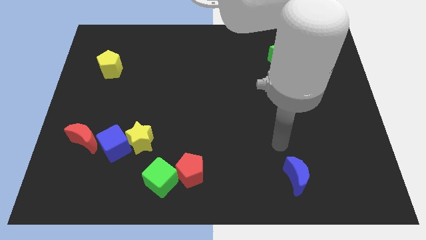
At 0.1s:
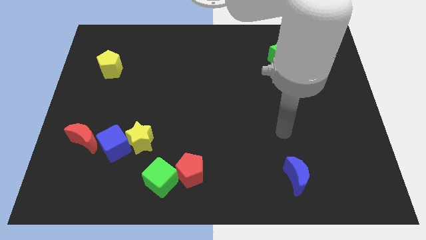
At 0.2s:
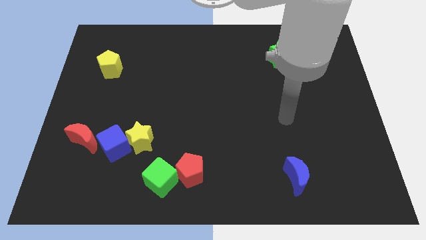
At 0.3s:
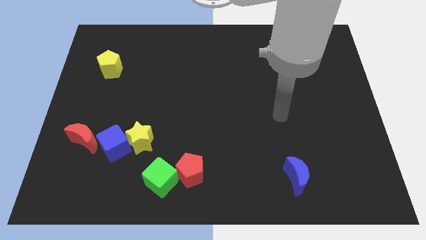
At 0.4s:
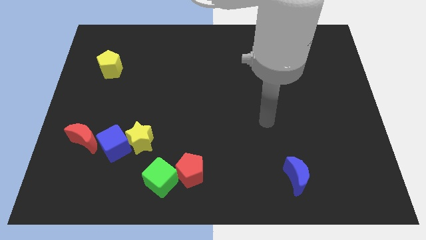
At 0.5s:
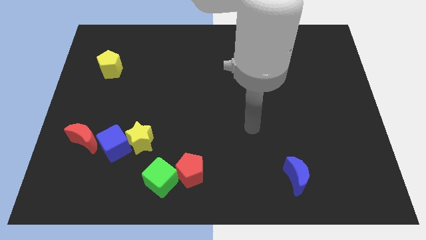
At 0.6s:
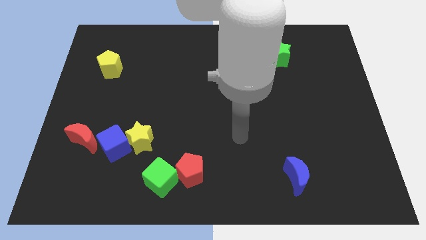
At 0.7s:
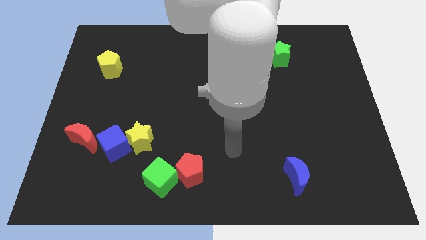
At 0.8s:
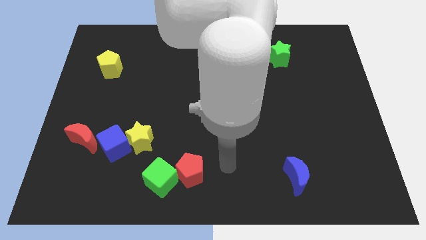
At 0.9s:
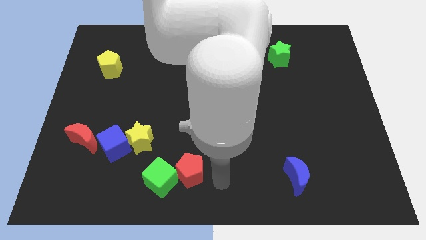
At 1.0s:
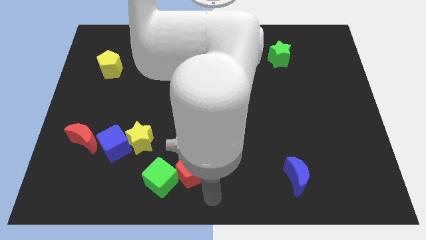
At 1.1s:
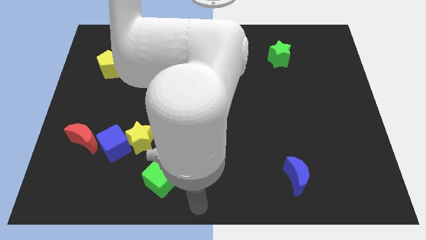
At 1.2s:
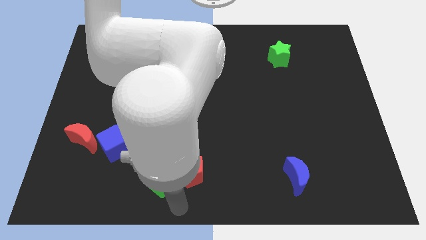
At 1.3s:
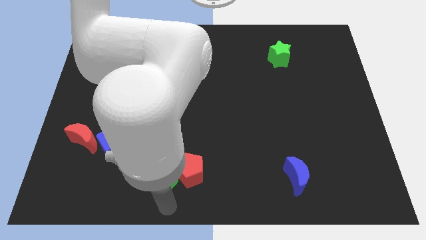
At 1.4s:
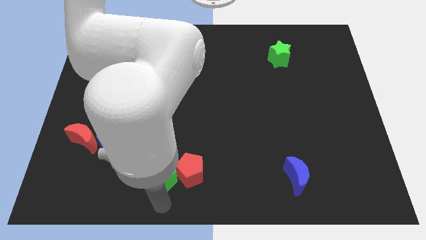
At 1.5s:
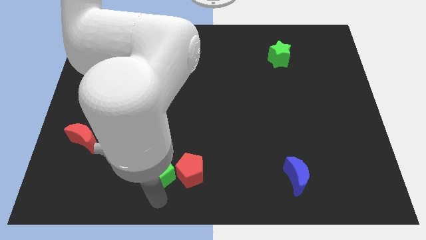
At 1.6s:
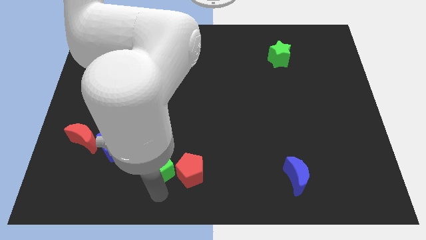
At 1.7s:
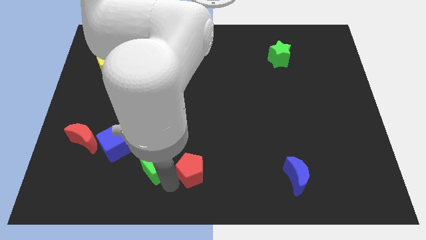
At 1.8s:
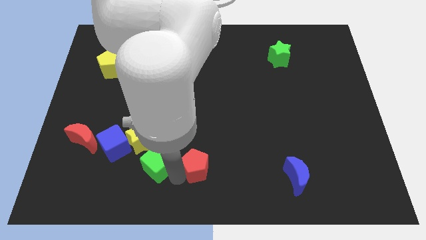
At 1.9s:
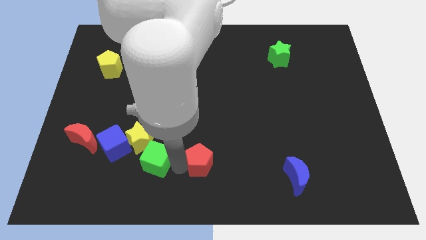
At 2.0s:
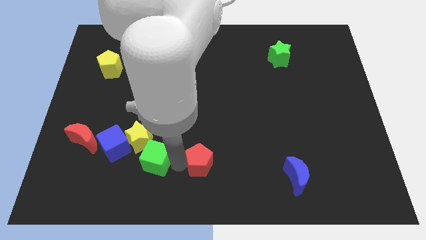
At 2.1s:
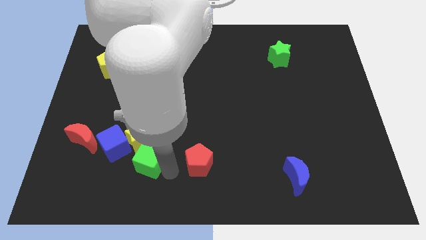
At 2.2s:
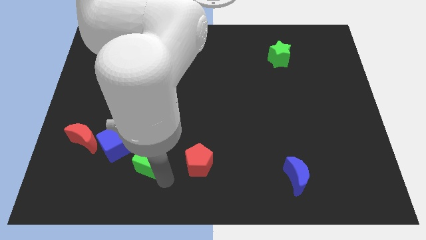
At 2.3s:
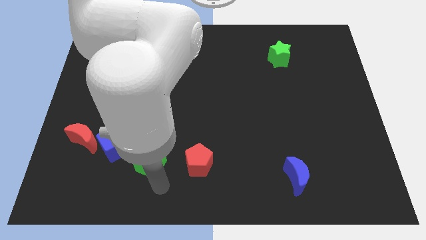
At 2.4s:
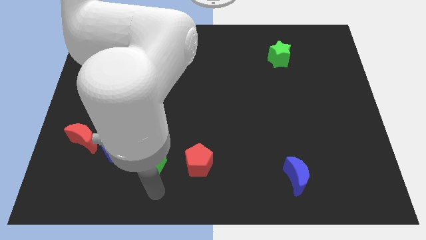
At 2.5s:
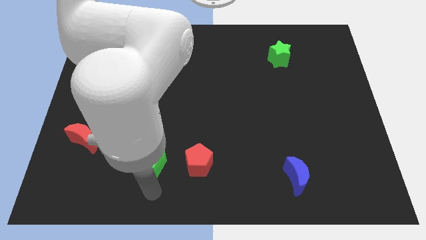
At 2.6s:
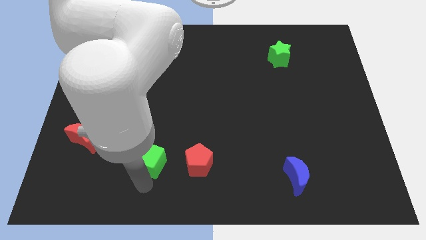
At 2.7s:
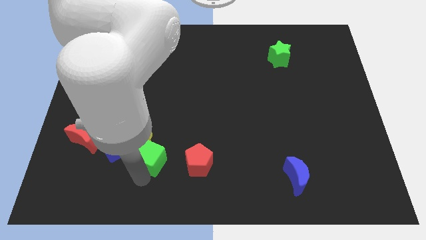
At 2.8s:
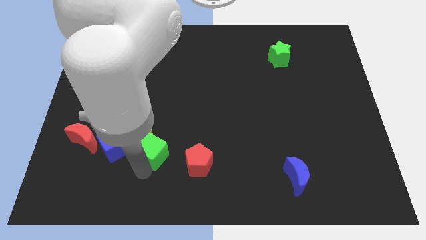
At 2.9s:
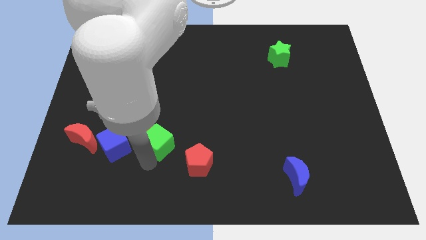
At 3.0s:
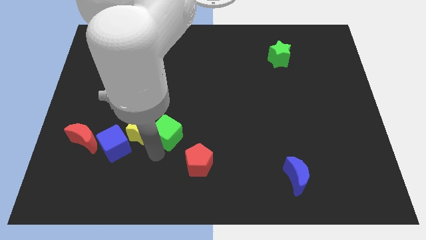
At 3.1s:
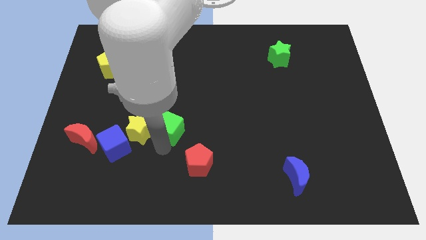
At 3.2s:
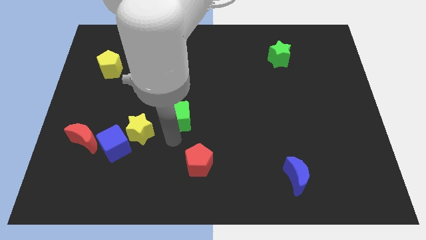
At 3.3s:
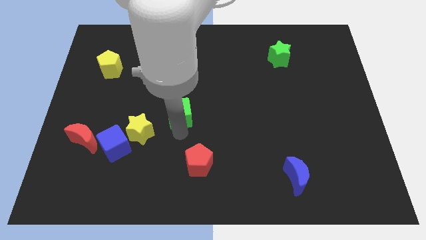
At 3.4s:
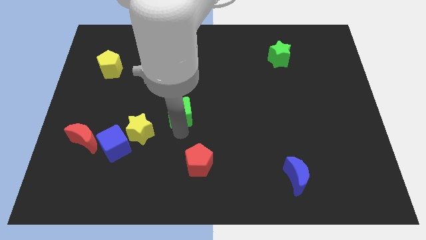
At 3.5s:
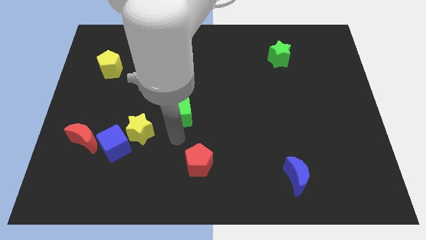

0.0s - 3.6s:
push green cube towards the center of board

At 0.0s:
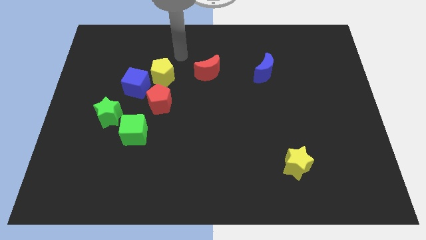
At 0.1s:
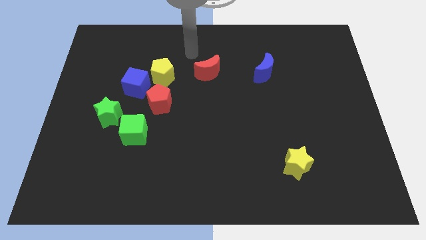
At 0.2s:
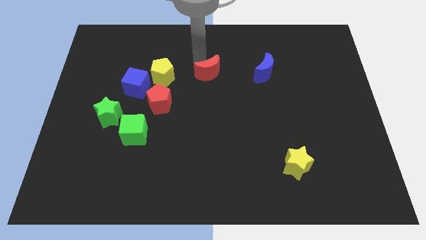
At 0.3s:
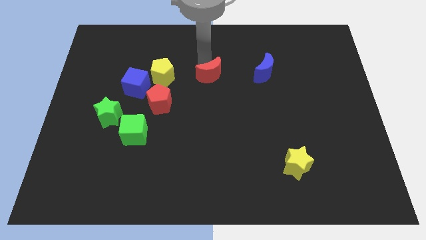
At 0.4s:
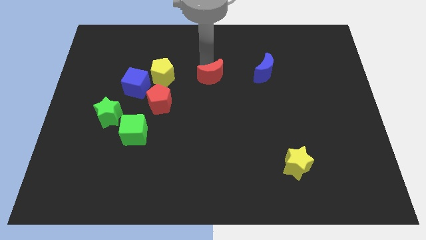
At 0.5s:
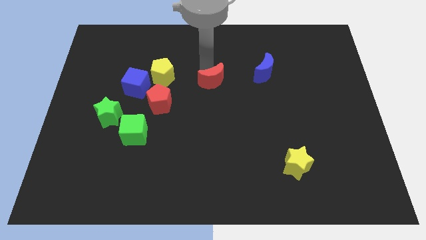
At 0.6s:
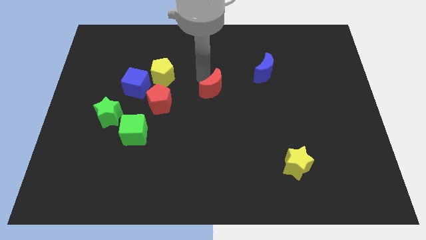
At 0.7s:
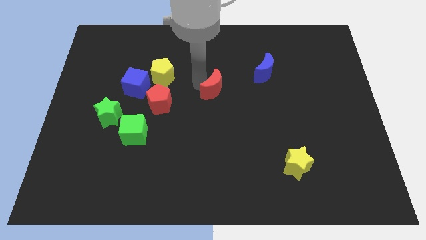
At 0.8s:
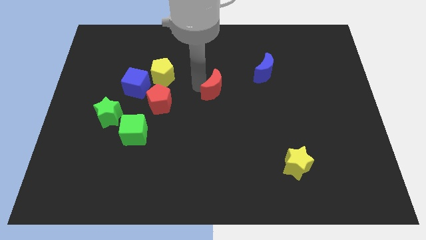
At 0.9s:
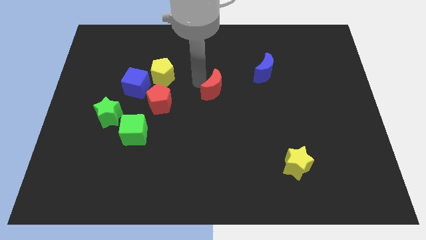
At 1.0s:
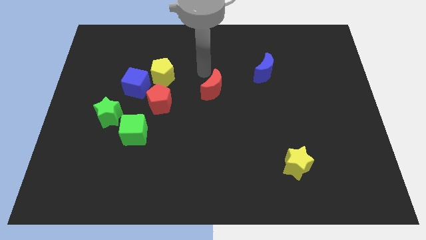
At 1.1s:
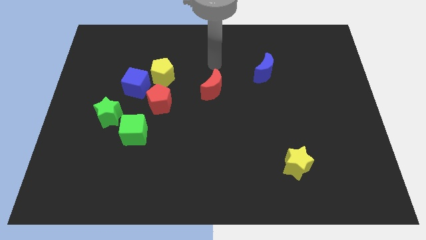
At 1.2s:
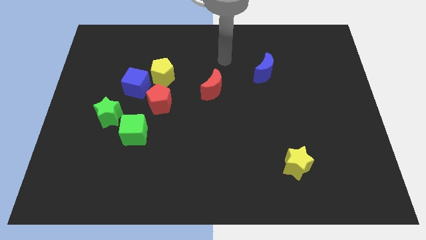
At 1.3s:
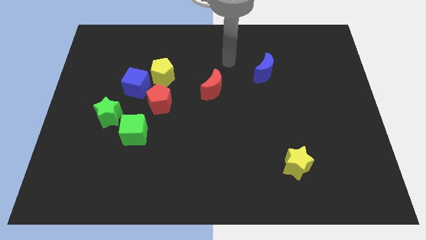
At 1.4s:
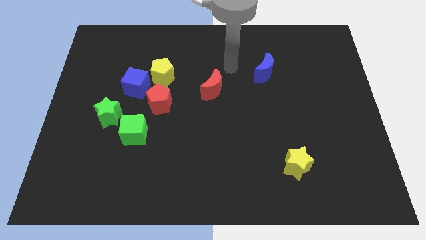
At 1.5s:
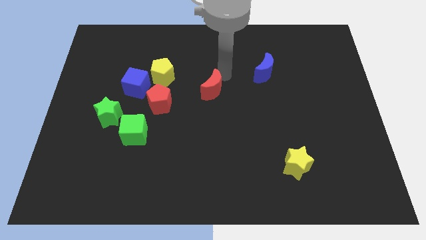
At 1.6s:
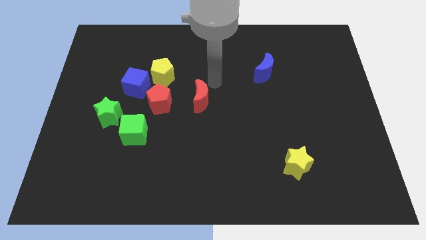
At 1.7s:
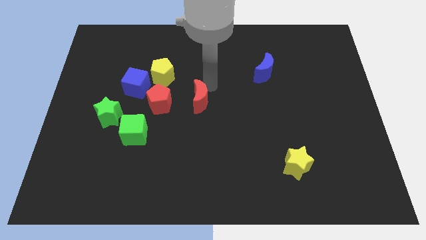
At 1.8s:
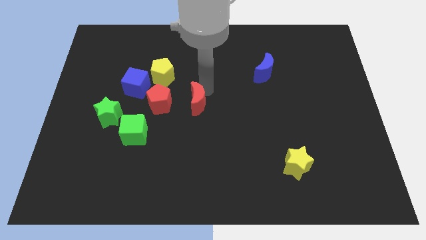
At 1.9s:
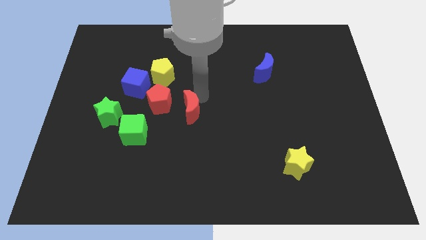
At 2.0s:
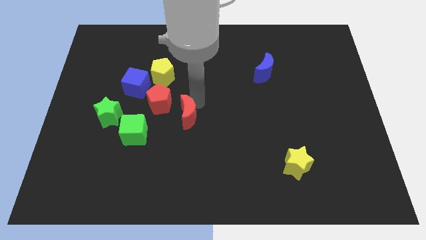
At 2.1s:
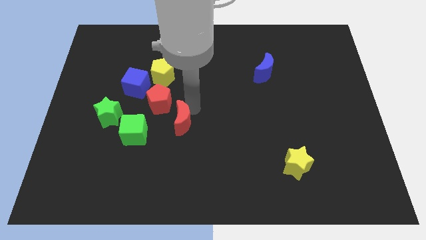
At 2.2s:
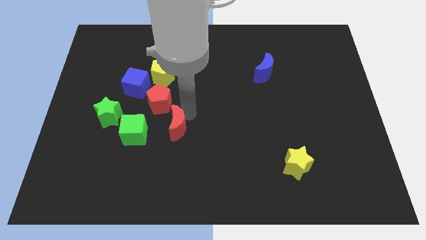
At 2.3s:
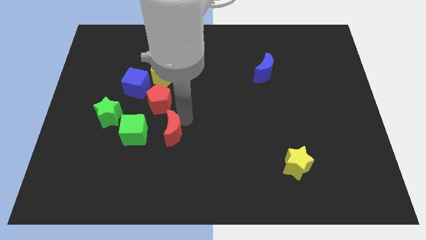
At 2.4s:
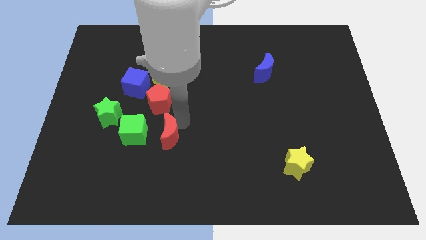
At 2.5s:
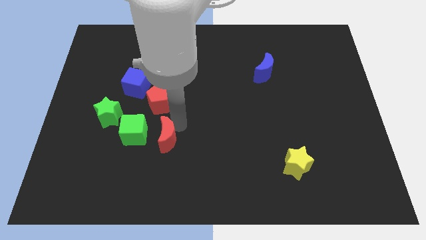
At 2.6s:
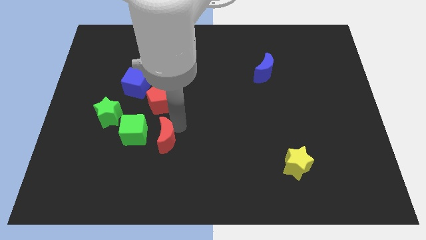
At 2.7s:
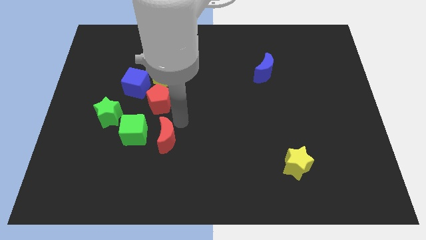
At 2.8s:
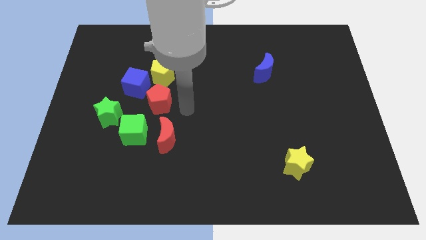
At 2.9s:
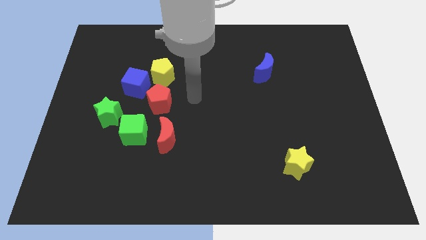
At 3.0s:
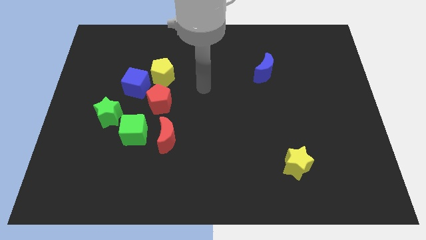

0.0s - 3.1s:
put red moon below red pentagon

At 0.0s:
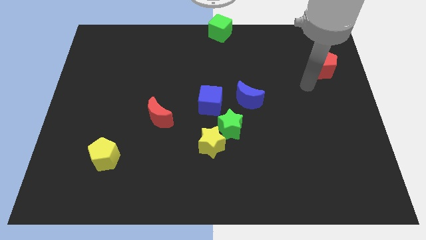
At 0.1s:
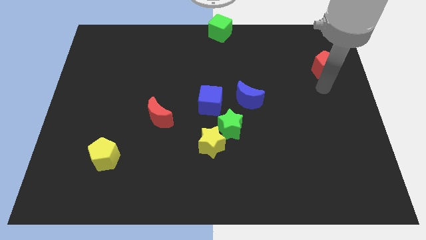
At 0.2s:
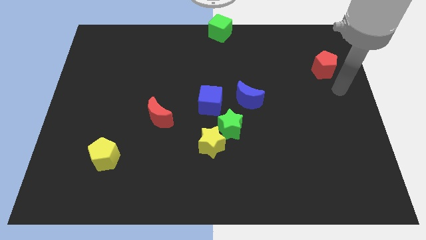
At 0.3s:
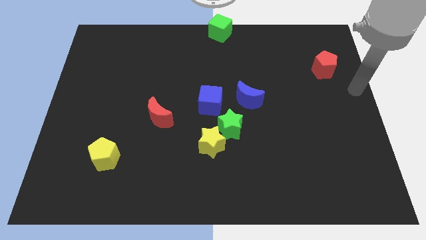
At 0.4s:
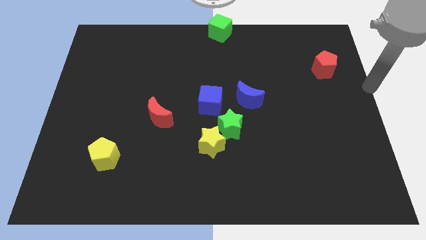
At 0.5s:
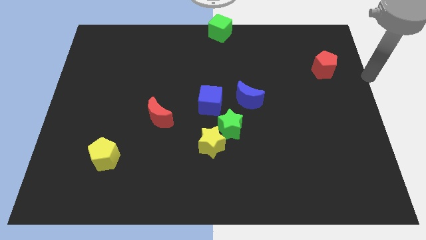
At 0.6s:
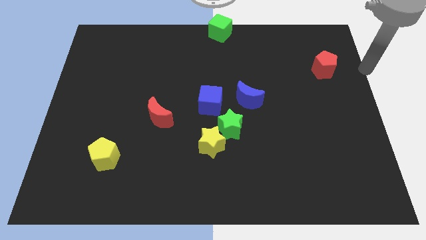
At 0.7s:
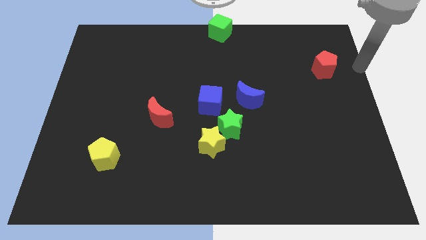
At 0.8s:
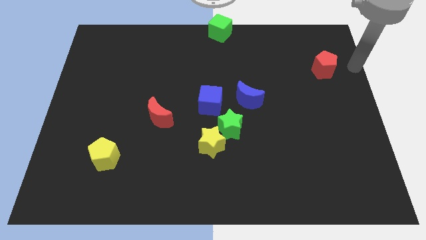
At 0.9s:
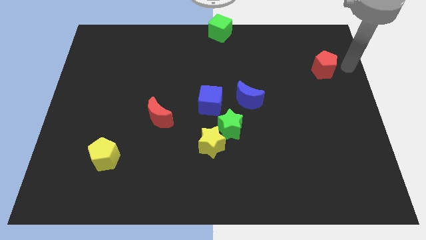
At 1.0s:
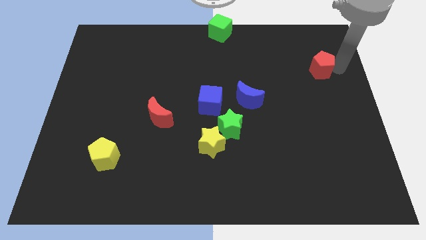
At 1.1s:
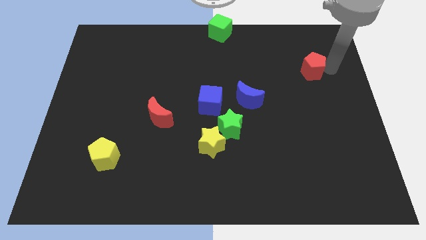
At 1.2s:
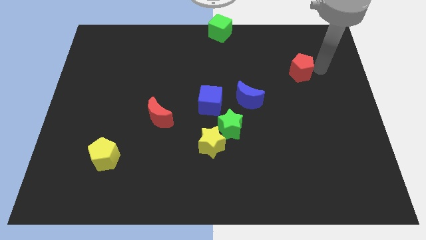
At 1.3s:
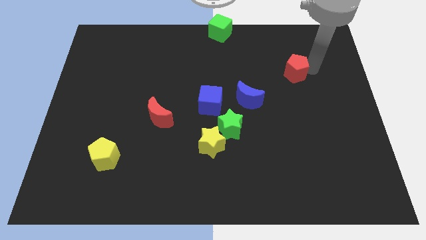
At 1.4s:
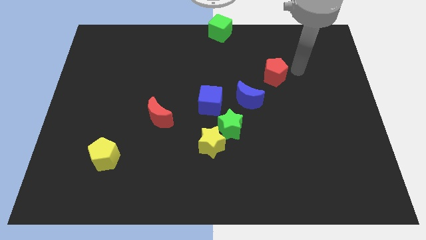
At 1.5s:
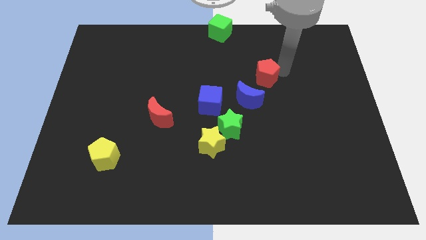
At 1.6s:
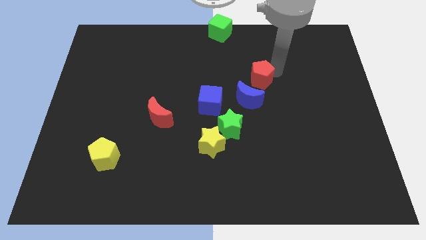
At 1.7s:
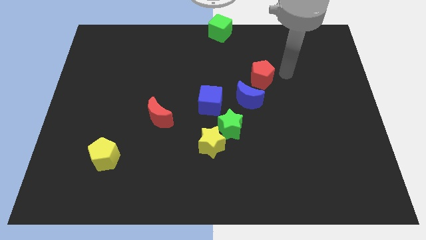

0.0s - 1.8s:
slide the red pentagon slightly to the left

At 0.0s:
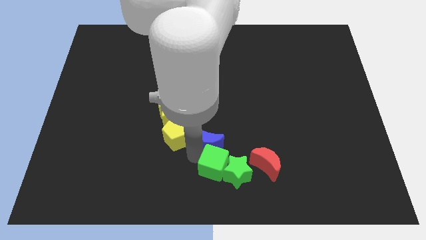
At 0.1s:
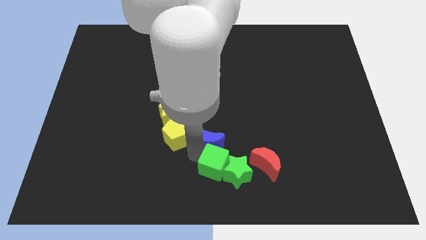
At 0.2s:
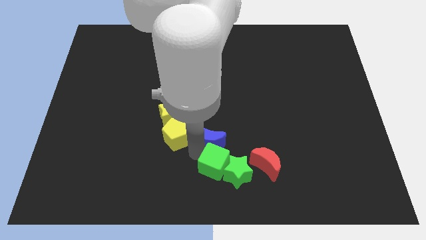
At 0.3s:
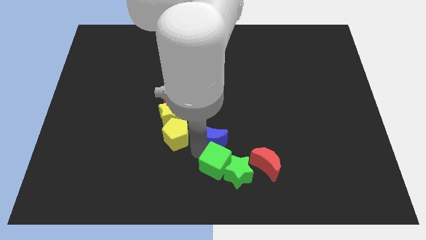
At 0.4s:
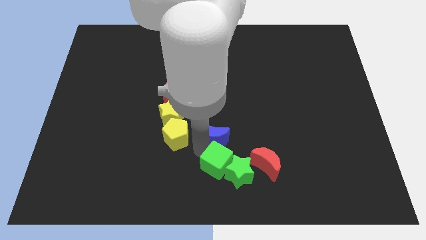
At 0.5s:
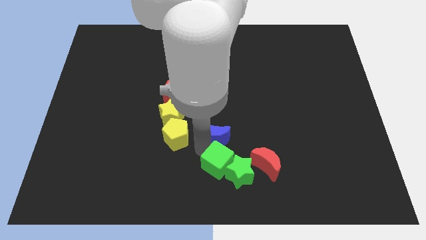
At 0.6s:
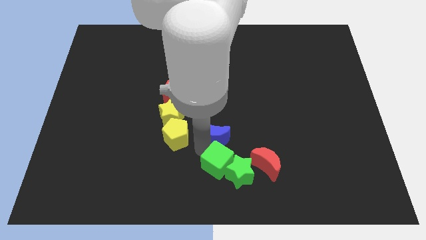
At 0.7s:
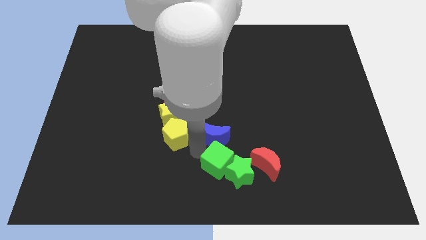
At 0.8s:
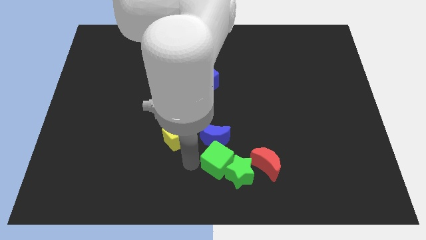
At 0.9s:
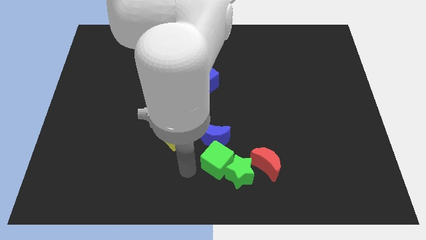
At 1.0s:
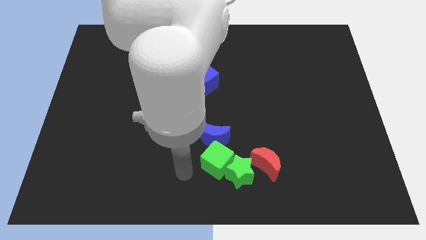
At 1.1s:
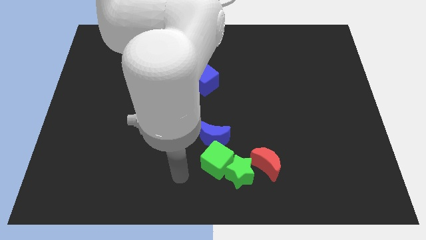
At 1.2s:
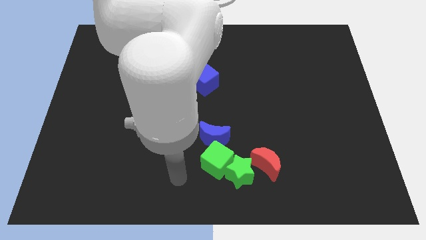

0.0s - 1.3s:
move blue moon away from group of blocks
